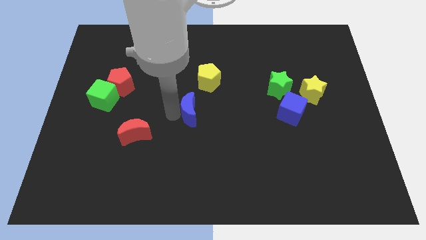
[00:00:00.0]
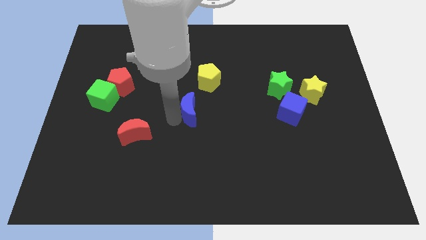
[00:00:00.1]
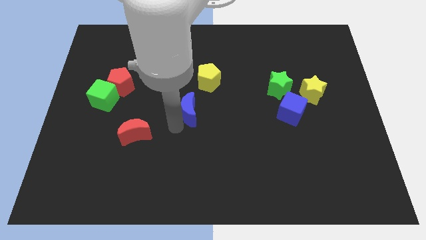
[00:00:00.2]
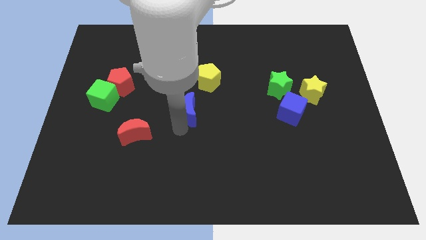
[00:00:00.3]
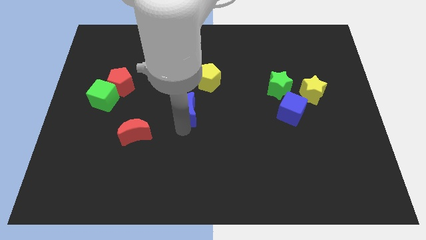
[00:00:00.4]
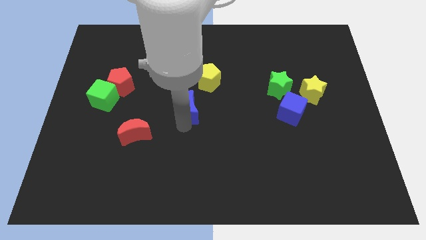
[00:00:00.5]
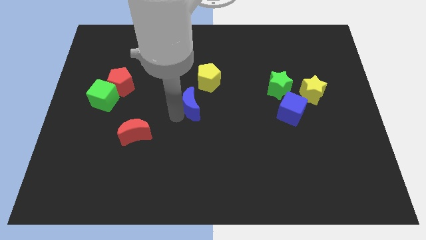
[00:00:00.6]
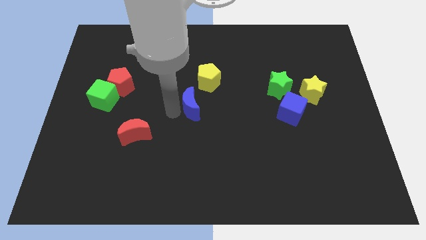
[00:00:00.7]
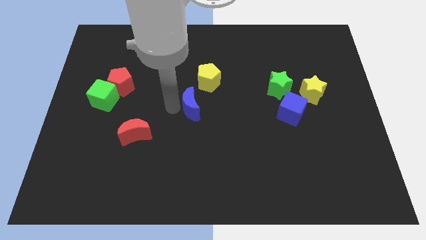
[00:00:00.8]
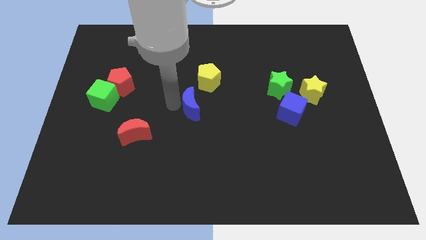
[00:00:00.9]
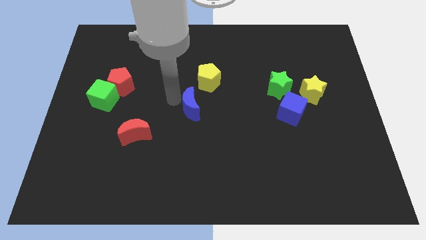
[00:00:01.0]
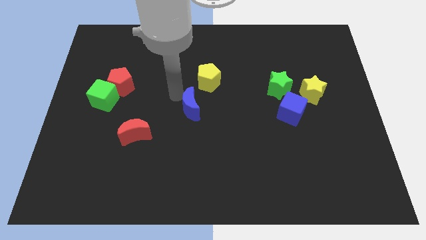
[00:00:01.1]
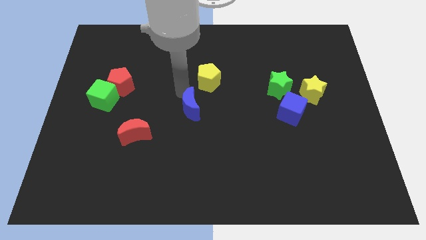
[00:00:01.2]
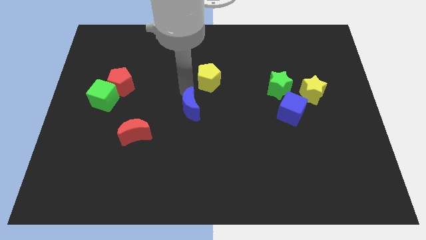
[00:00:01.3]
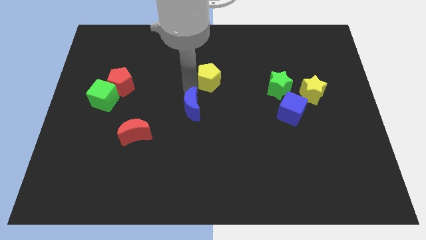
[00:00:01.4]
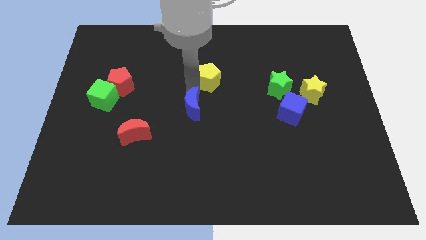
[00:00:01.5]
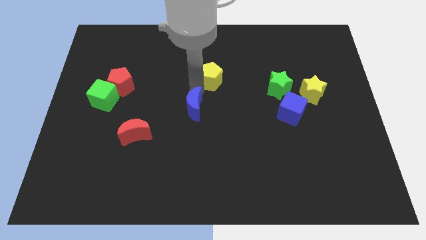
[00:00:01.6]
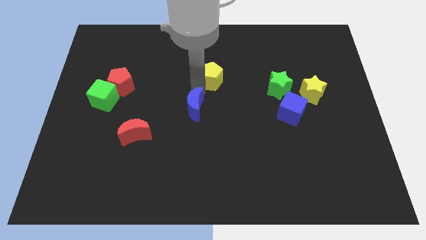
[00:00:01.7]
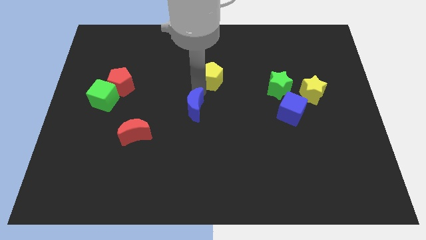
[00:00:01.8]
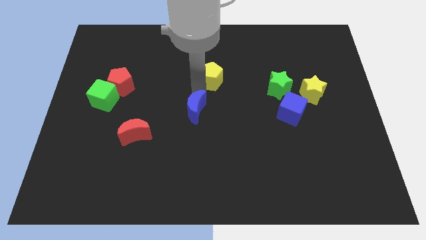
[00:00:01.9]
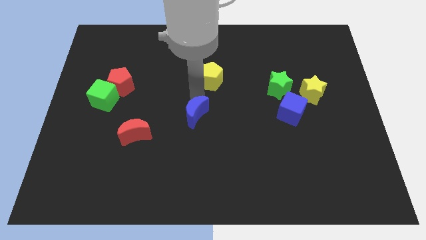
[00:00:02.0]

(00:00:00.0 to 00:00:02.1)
move the blue moon slightly down

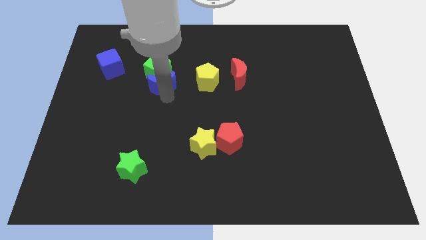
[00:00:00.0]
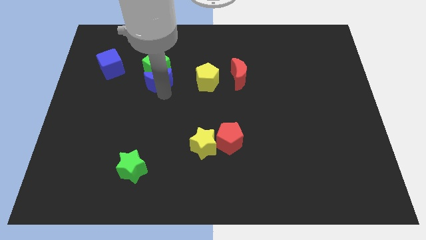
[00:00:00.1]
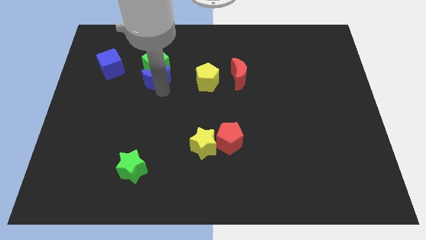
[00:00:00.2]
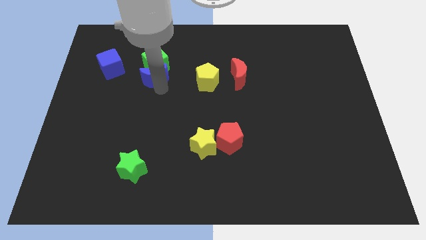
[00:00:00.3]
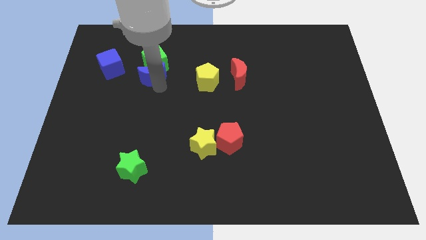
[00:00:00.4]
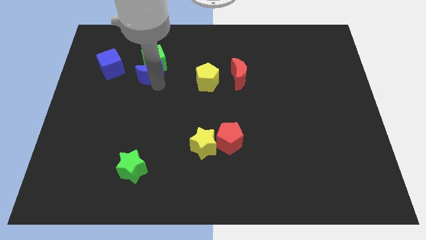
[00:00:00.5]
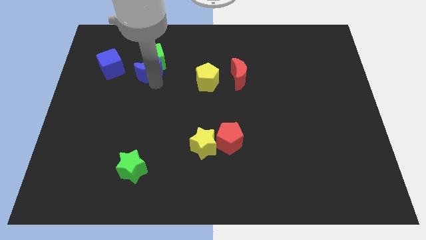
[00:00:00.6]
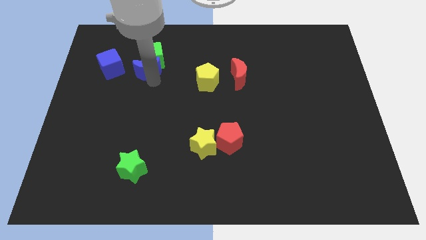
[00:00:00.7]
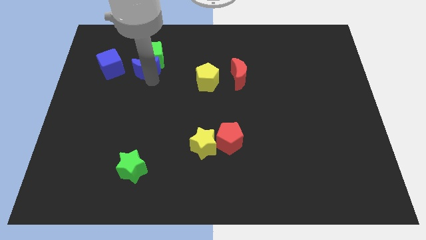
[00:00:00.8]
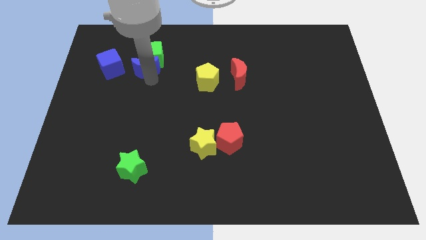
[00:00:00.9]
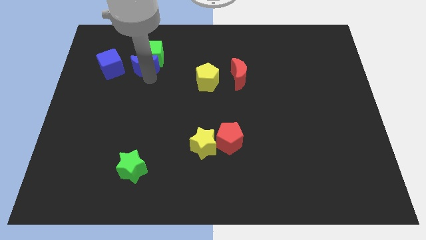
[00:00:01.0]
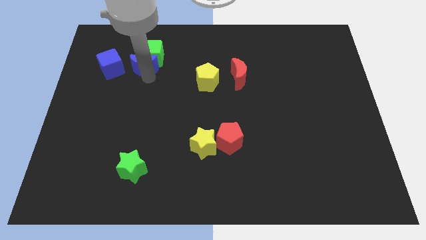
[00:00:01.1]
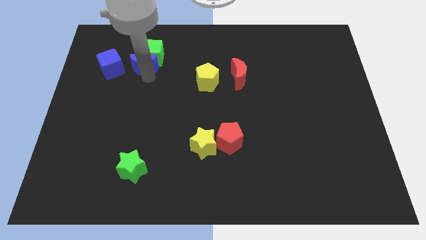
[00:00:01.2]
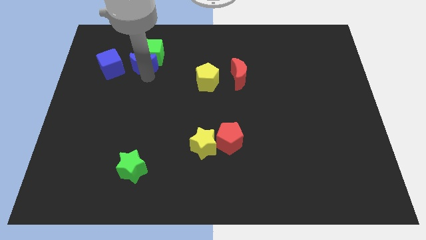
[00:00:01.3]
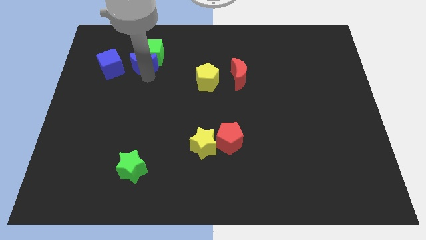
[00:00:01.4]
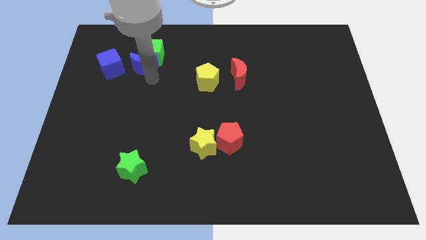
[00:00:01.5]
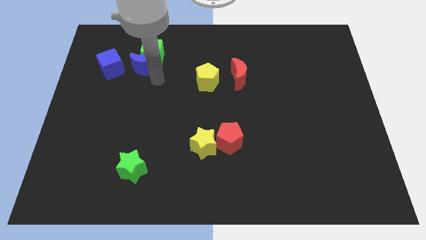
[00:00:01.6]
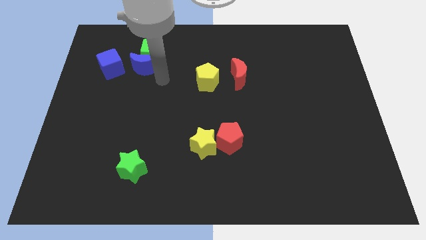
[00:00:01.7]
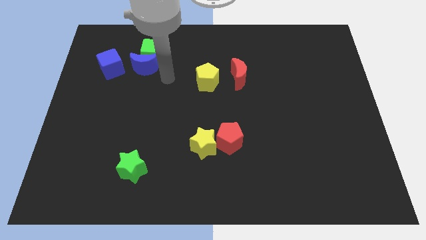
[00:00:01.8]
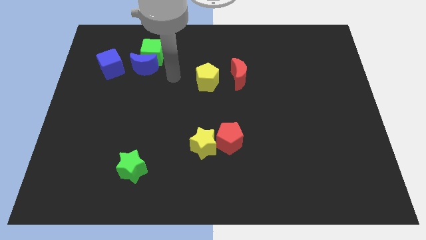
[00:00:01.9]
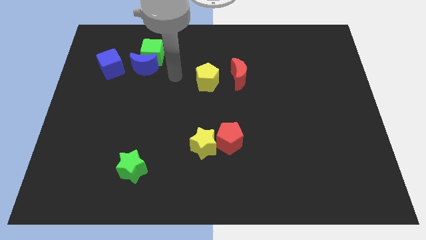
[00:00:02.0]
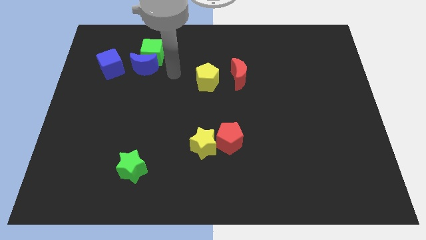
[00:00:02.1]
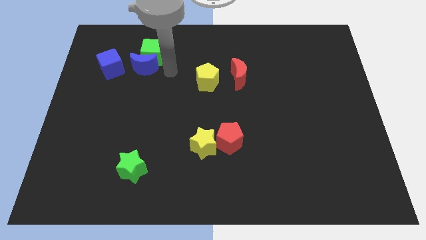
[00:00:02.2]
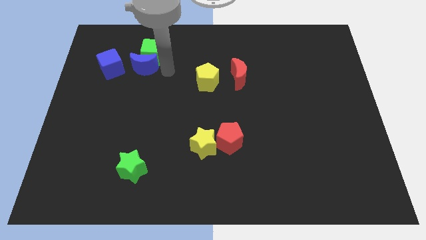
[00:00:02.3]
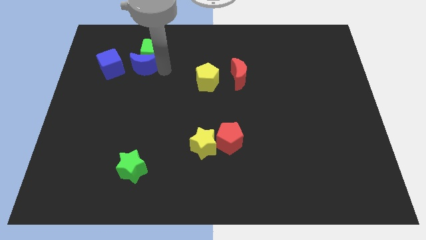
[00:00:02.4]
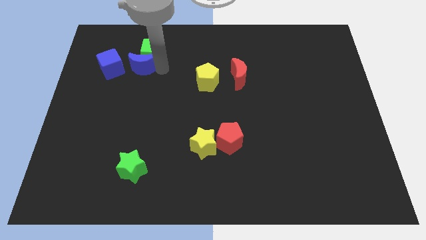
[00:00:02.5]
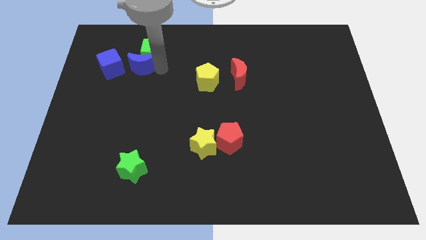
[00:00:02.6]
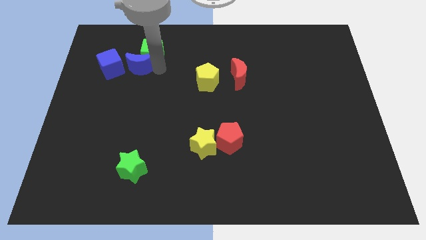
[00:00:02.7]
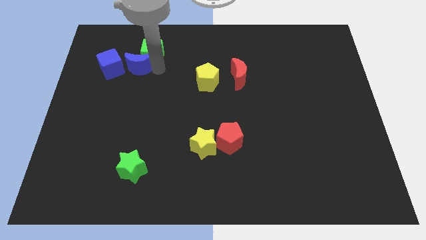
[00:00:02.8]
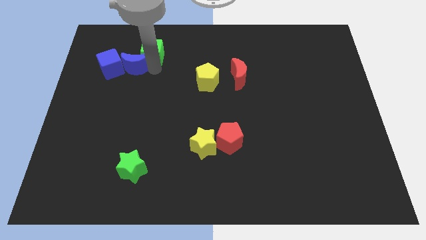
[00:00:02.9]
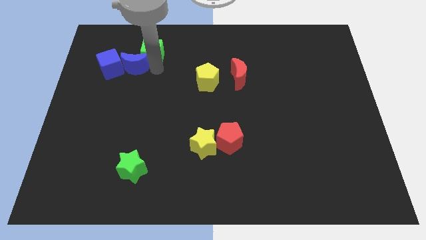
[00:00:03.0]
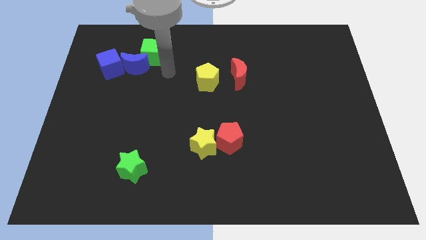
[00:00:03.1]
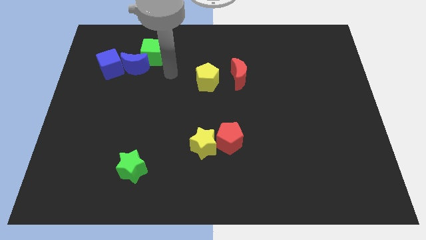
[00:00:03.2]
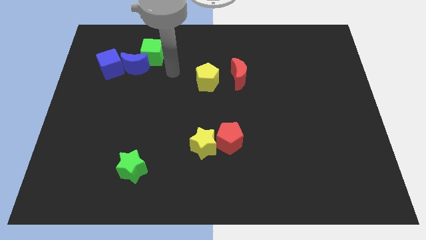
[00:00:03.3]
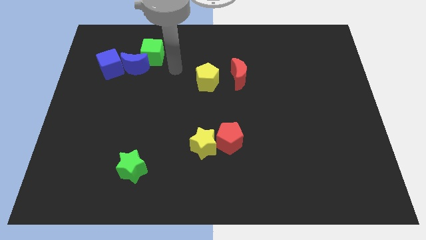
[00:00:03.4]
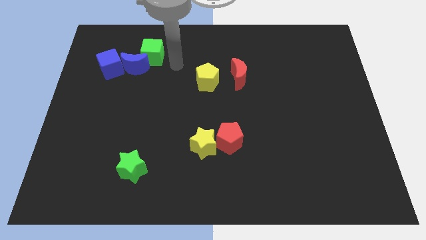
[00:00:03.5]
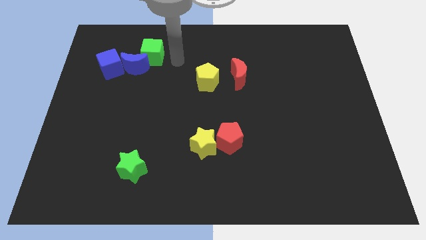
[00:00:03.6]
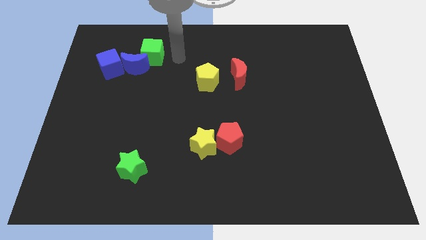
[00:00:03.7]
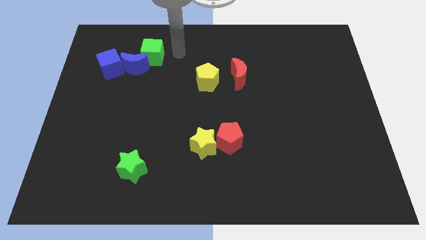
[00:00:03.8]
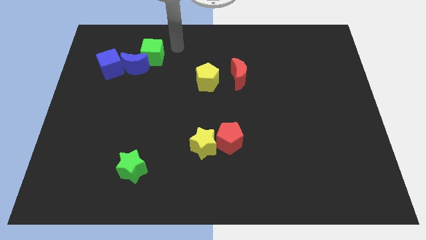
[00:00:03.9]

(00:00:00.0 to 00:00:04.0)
place the blue moon in between the green cube and the blue cube

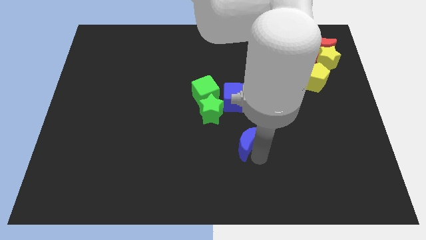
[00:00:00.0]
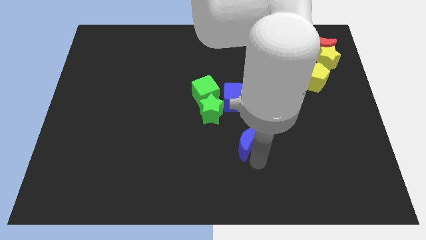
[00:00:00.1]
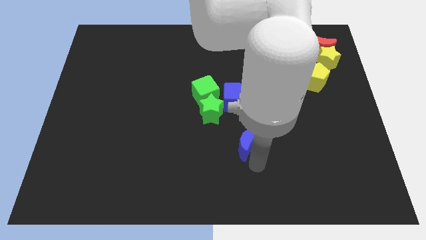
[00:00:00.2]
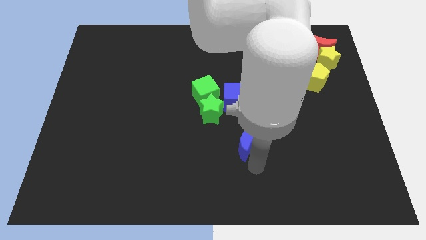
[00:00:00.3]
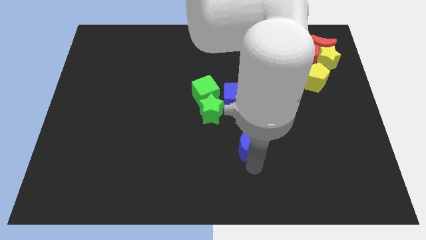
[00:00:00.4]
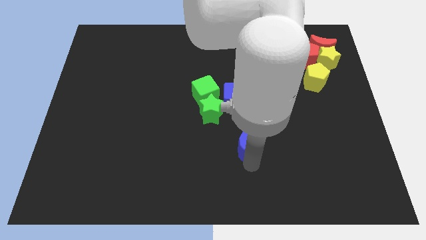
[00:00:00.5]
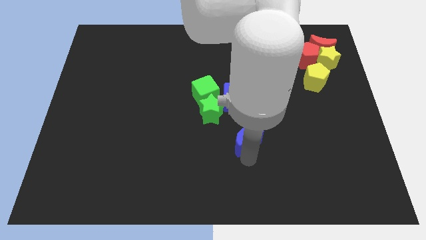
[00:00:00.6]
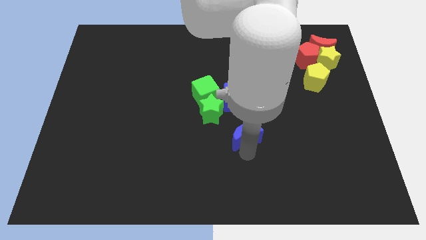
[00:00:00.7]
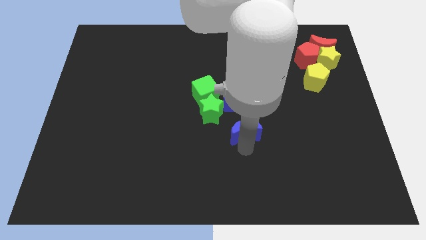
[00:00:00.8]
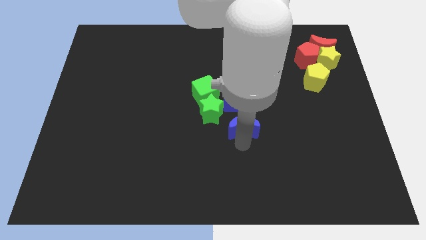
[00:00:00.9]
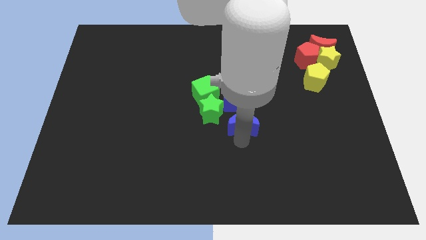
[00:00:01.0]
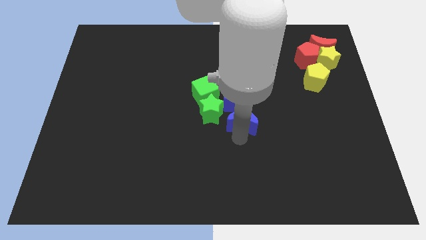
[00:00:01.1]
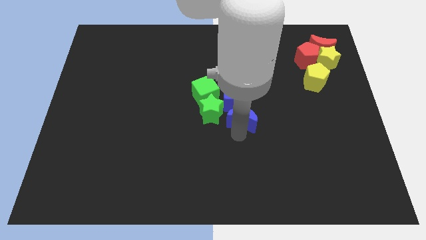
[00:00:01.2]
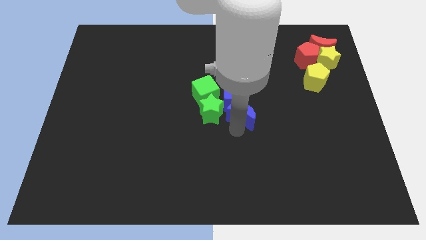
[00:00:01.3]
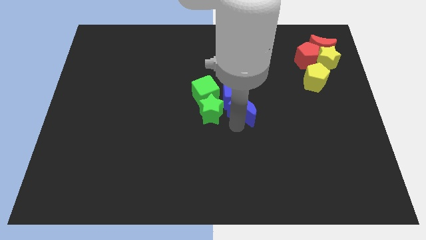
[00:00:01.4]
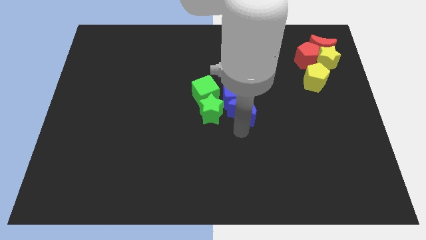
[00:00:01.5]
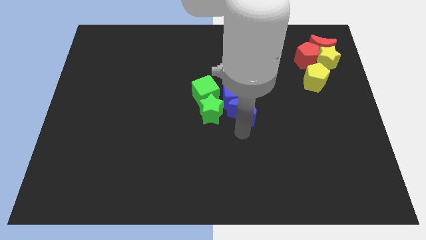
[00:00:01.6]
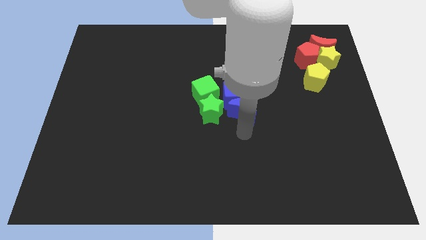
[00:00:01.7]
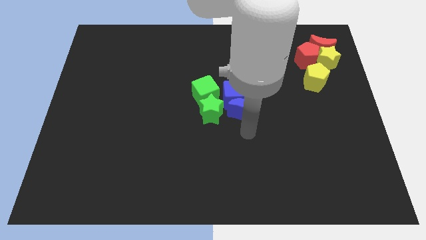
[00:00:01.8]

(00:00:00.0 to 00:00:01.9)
push the blue crescent into the blue cube

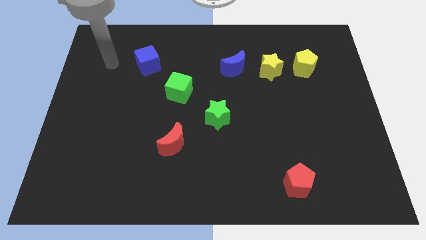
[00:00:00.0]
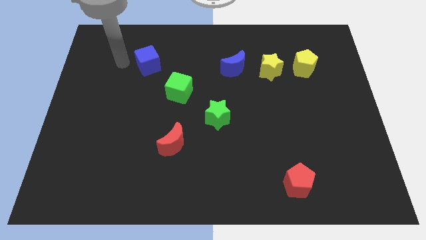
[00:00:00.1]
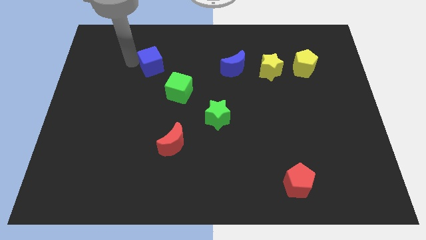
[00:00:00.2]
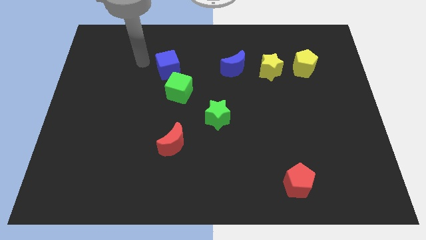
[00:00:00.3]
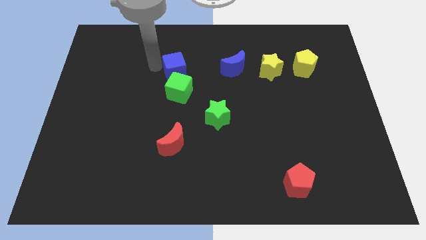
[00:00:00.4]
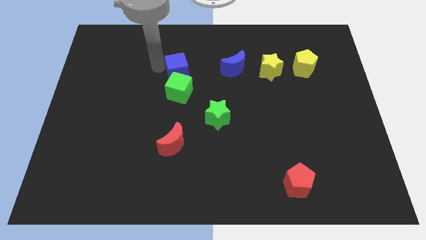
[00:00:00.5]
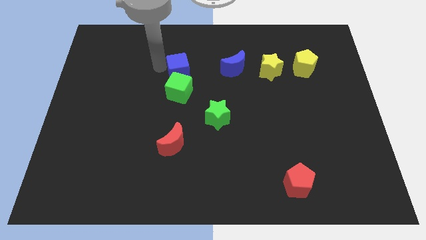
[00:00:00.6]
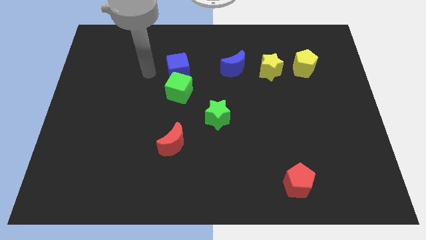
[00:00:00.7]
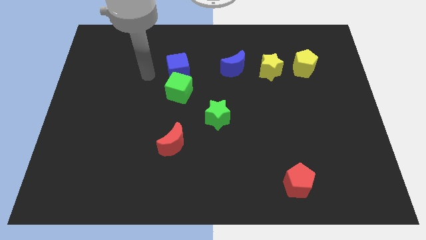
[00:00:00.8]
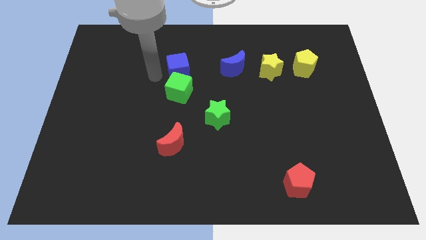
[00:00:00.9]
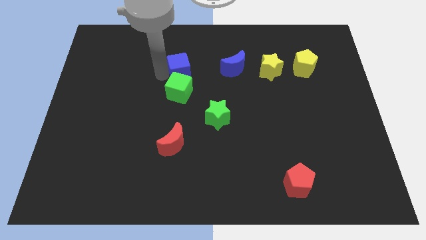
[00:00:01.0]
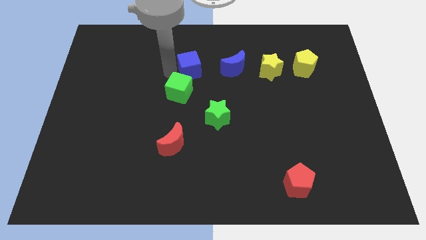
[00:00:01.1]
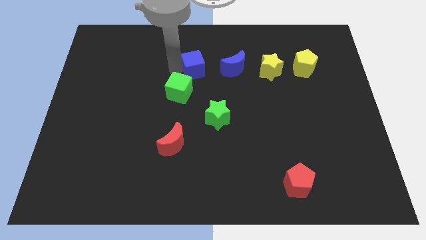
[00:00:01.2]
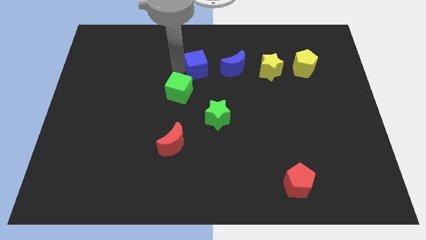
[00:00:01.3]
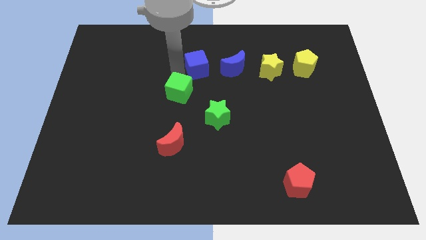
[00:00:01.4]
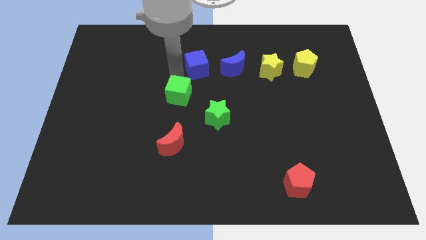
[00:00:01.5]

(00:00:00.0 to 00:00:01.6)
slide the blue cube towards the blue crescent
